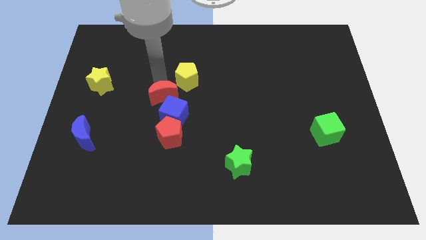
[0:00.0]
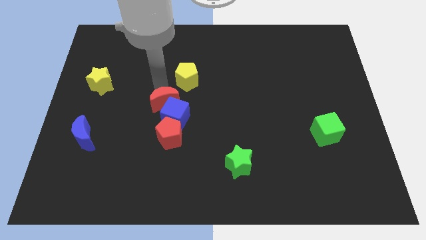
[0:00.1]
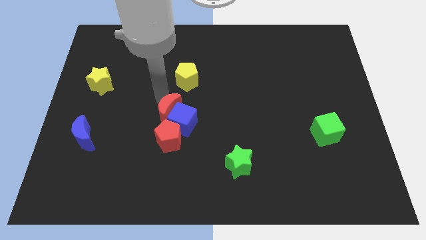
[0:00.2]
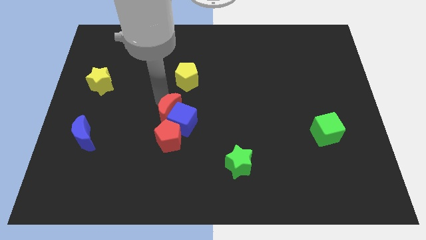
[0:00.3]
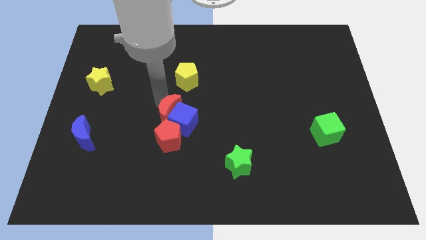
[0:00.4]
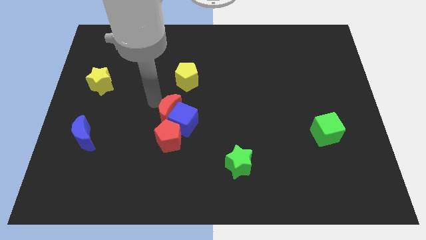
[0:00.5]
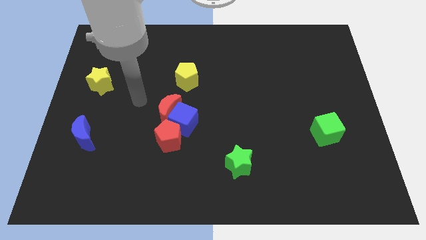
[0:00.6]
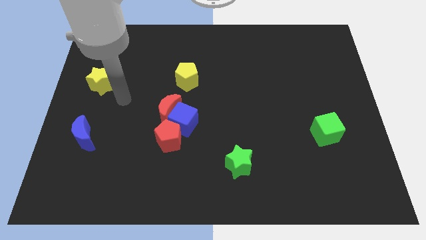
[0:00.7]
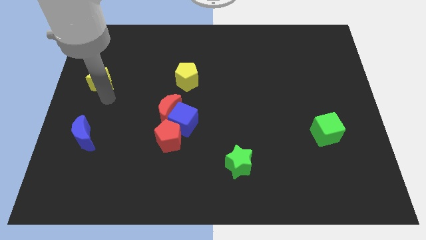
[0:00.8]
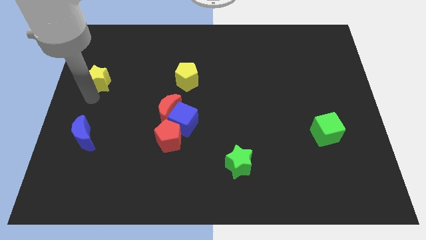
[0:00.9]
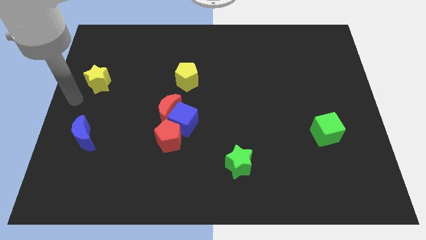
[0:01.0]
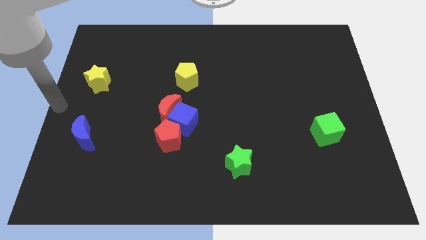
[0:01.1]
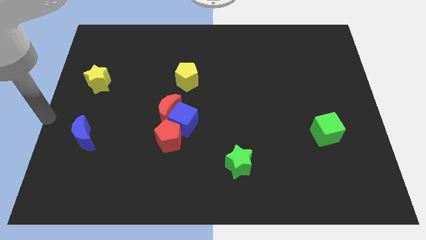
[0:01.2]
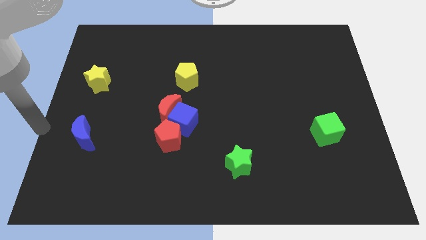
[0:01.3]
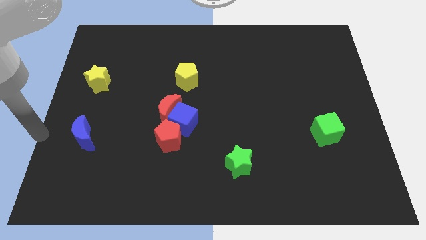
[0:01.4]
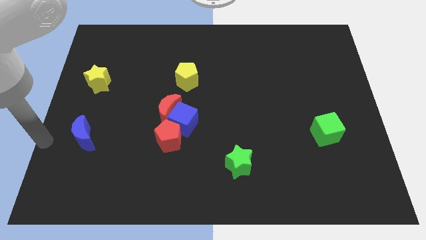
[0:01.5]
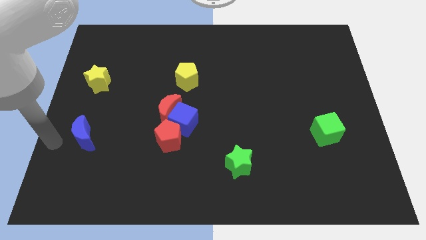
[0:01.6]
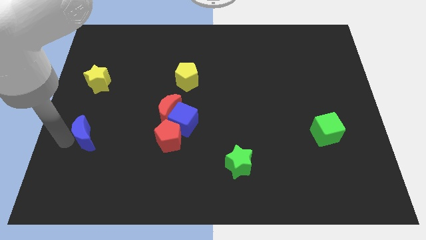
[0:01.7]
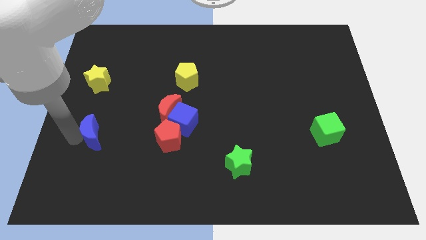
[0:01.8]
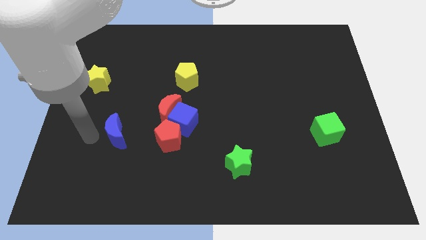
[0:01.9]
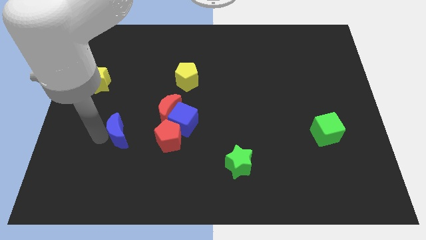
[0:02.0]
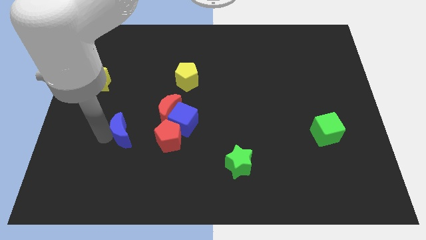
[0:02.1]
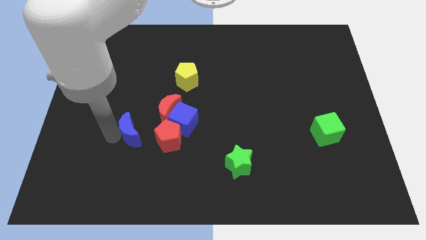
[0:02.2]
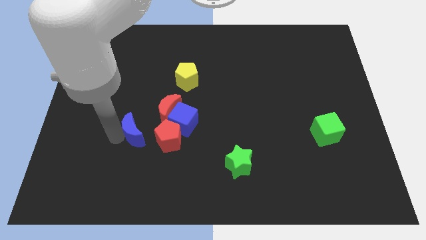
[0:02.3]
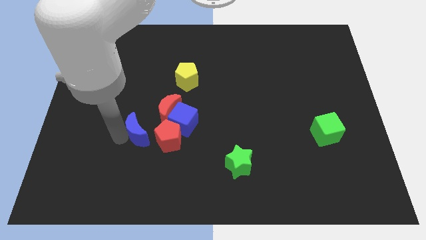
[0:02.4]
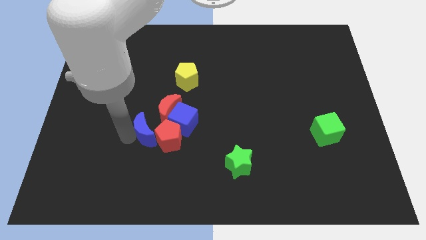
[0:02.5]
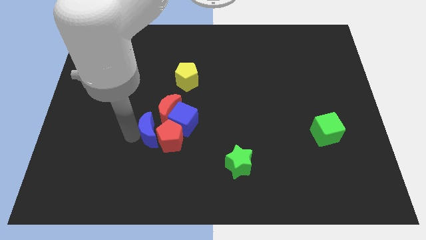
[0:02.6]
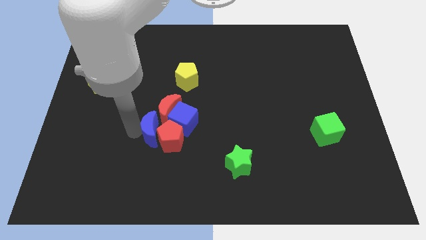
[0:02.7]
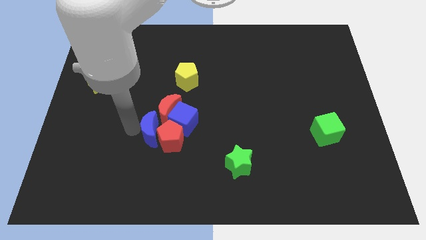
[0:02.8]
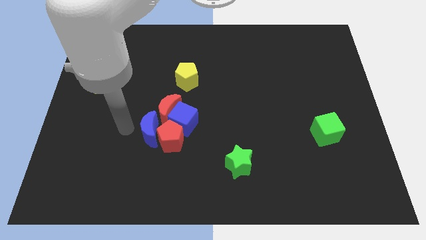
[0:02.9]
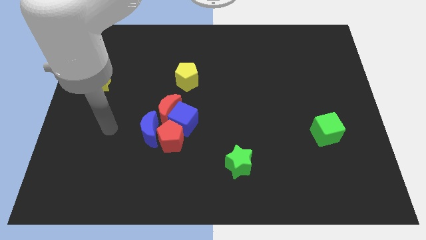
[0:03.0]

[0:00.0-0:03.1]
put the blue moon at the bottom left of the red crescent

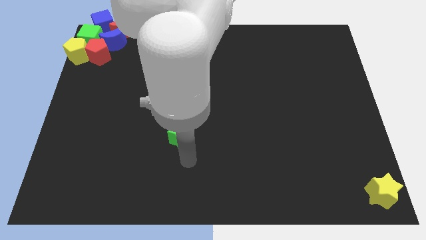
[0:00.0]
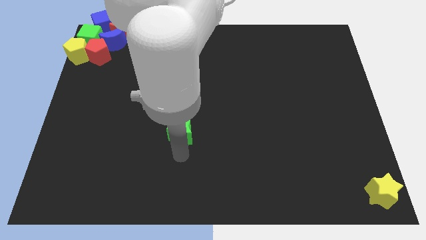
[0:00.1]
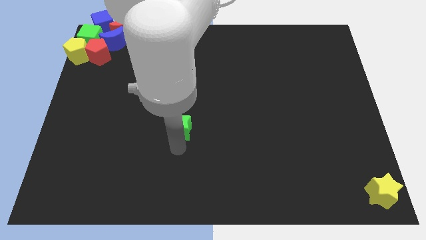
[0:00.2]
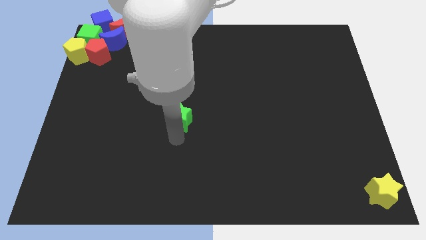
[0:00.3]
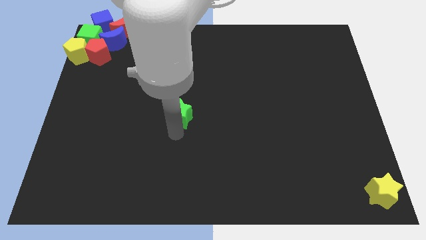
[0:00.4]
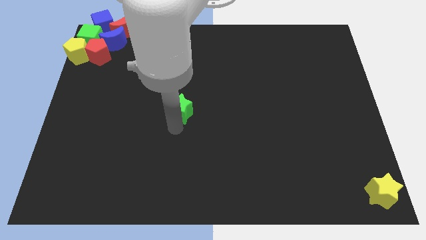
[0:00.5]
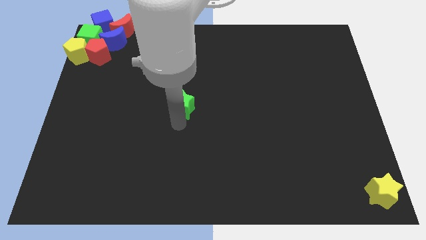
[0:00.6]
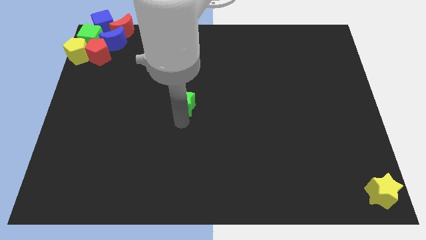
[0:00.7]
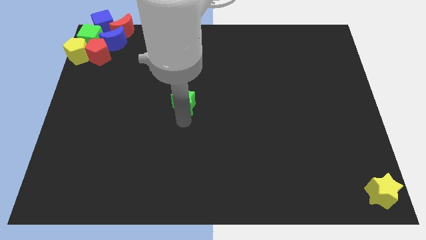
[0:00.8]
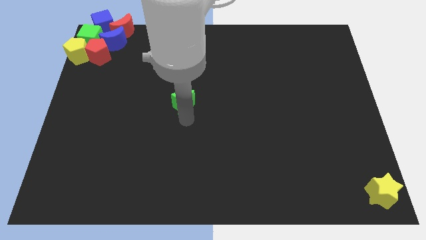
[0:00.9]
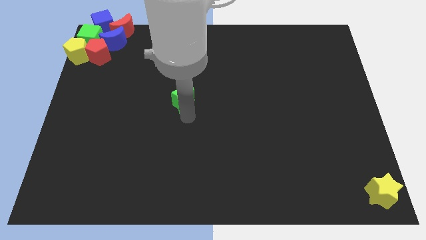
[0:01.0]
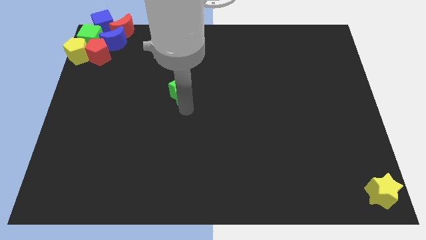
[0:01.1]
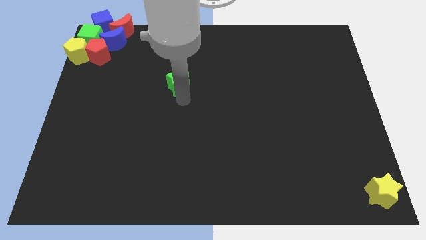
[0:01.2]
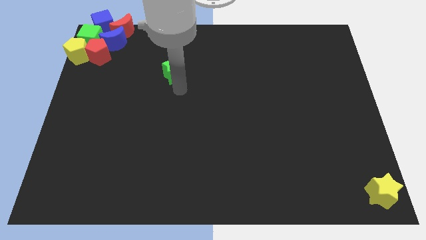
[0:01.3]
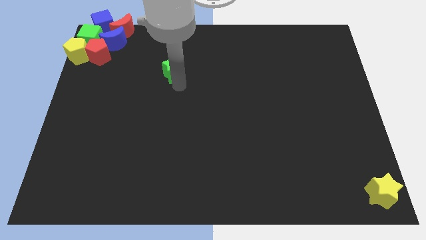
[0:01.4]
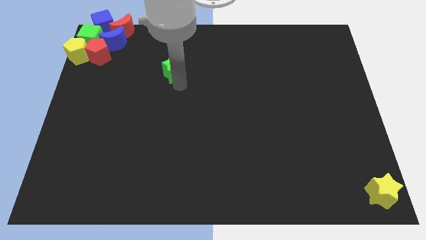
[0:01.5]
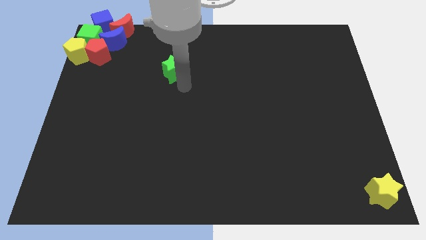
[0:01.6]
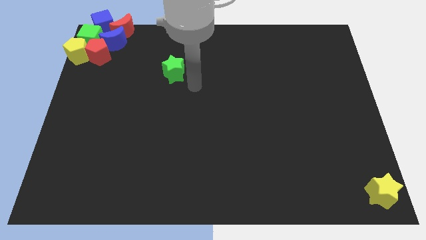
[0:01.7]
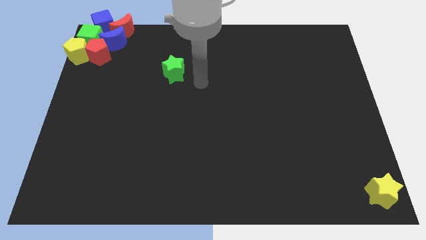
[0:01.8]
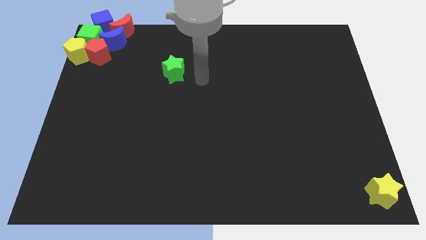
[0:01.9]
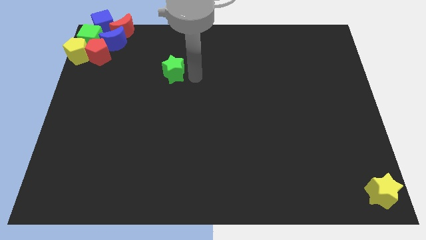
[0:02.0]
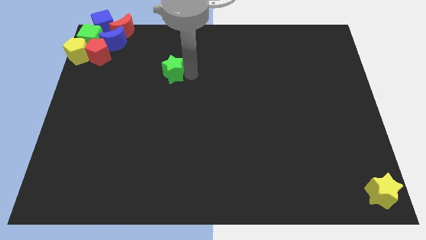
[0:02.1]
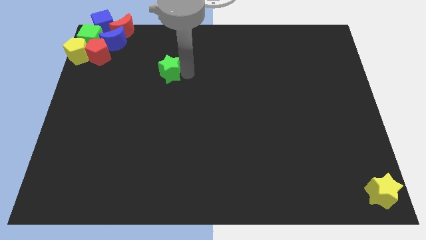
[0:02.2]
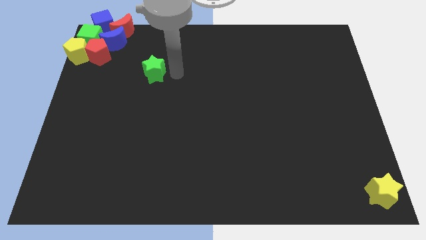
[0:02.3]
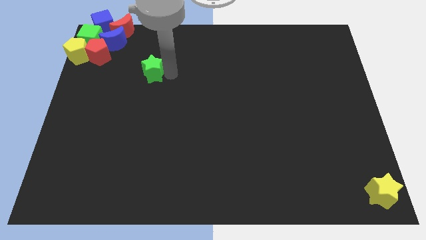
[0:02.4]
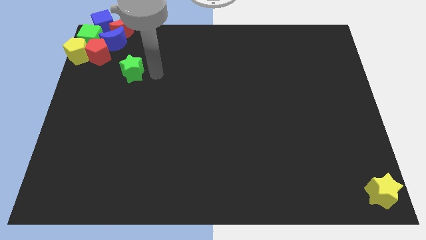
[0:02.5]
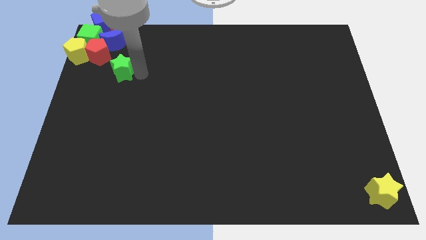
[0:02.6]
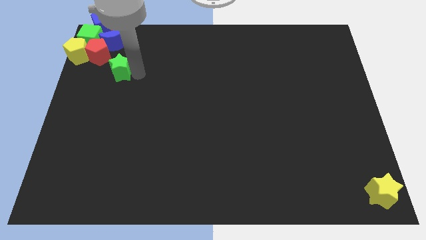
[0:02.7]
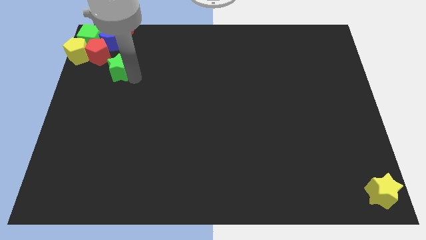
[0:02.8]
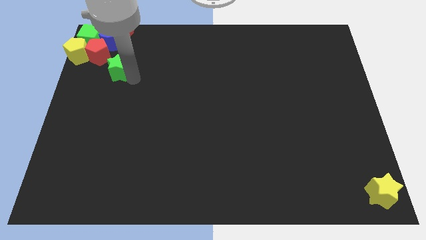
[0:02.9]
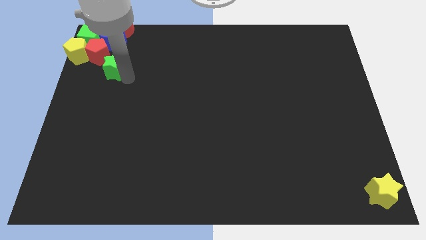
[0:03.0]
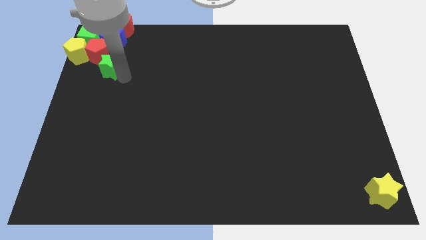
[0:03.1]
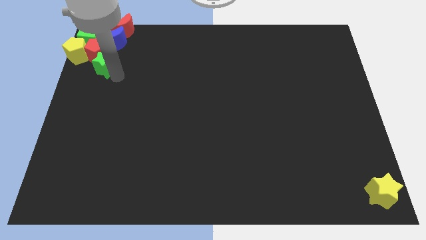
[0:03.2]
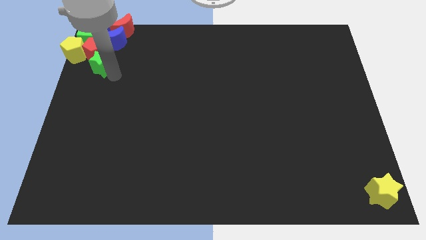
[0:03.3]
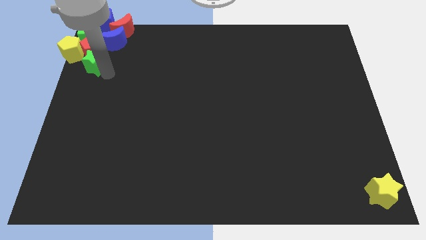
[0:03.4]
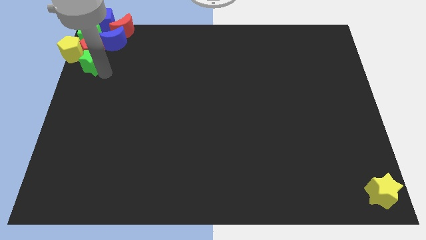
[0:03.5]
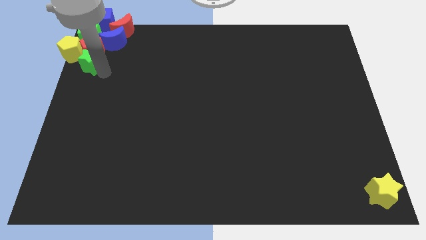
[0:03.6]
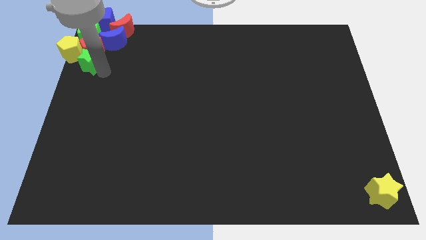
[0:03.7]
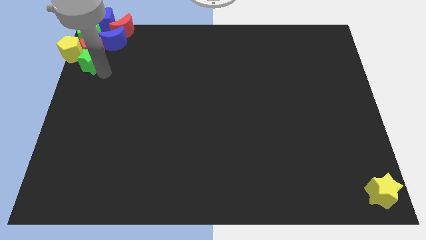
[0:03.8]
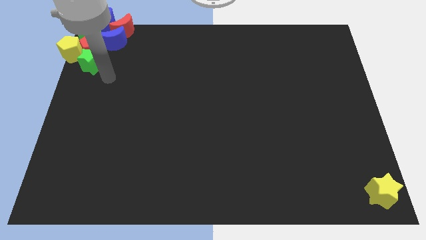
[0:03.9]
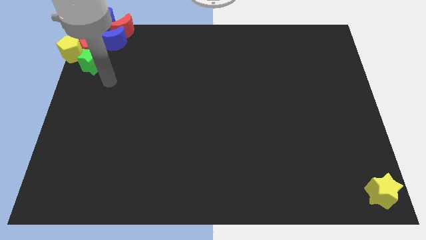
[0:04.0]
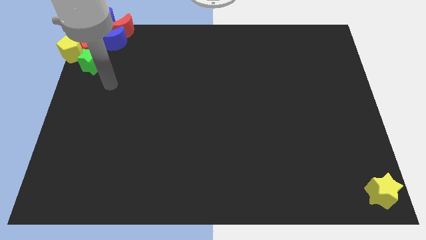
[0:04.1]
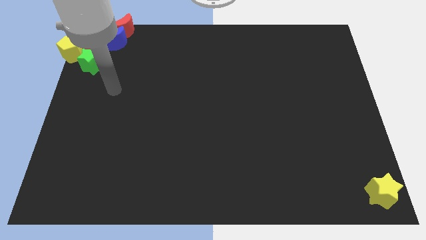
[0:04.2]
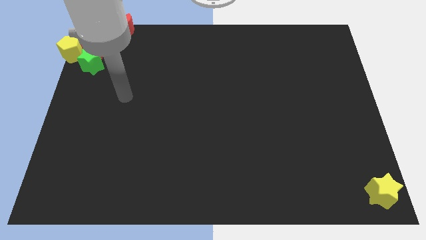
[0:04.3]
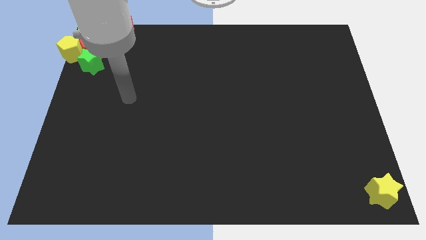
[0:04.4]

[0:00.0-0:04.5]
move the green star near the red pentagon top left corner of the board

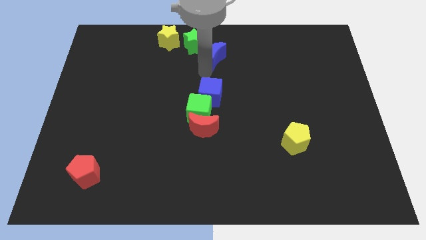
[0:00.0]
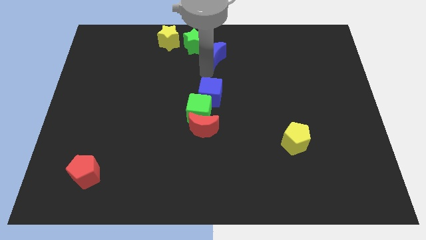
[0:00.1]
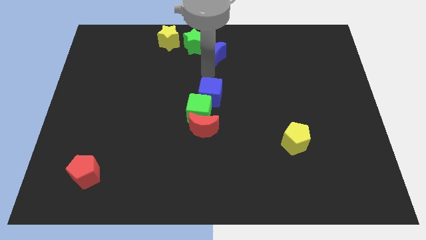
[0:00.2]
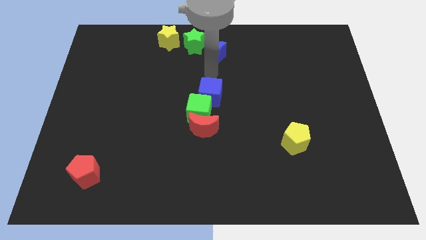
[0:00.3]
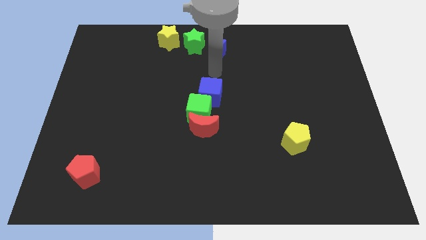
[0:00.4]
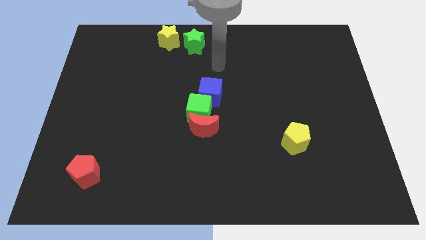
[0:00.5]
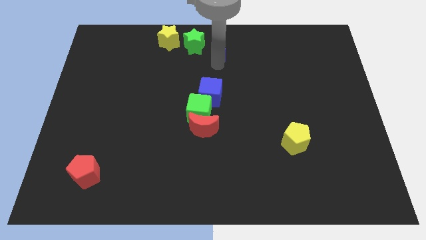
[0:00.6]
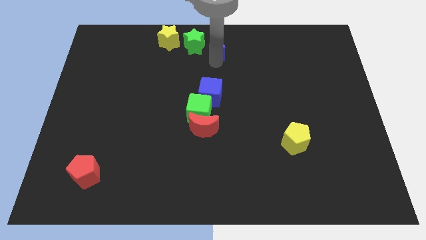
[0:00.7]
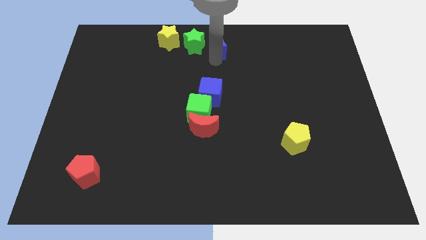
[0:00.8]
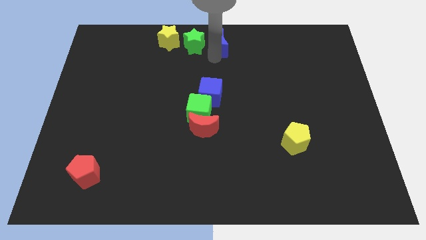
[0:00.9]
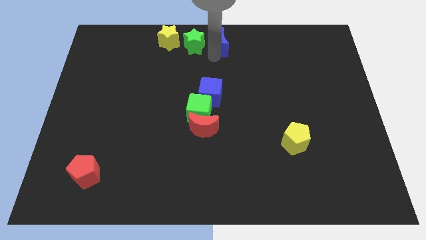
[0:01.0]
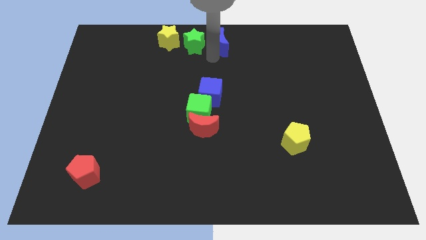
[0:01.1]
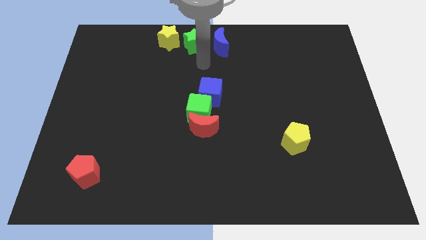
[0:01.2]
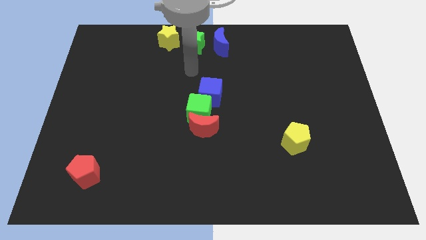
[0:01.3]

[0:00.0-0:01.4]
move the blue crescent to the right of the green star
